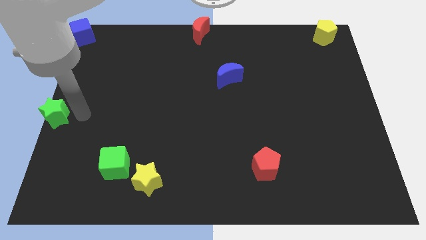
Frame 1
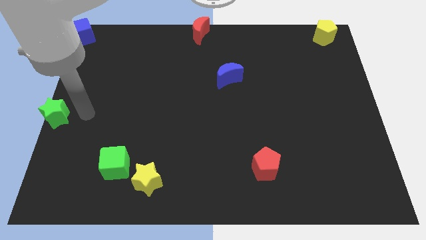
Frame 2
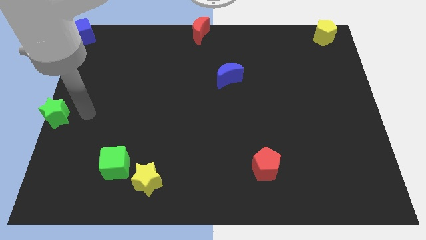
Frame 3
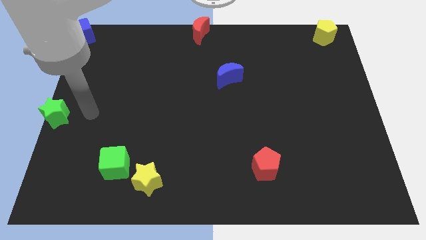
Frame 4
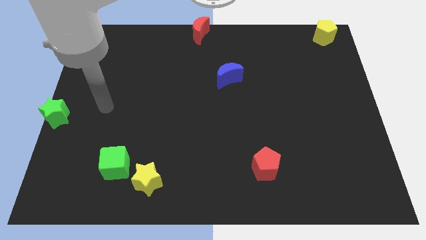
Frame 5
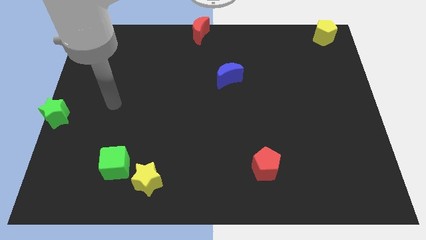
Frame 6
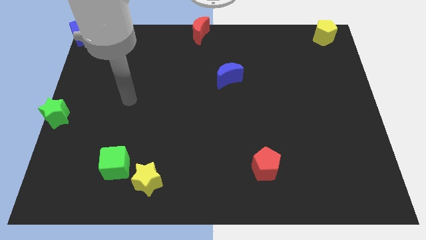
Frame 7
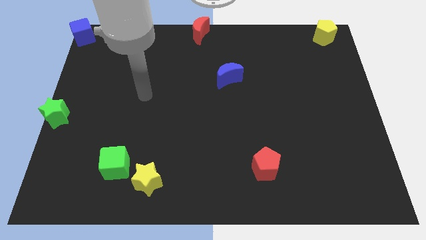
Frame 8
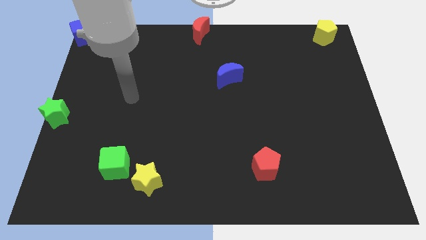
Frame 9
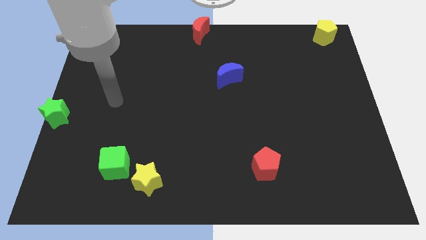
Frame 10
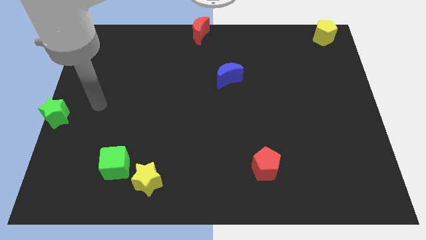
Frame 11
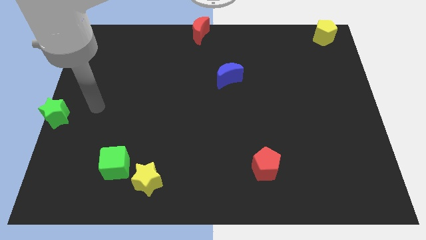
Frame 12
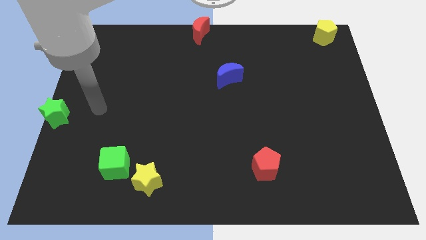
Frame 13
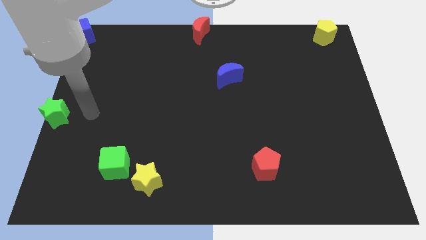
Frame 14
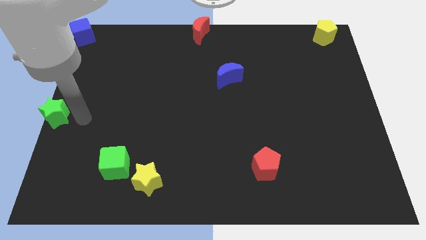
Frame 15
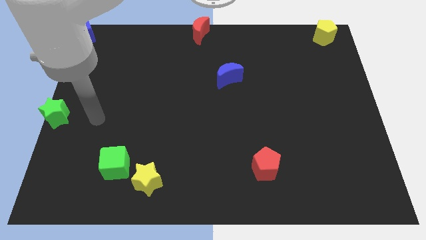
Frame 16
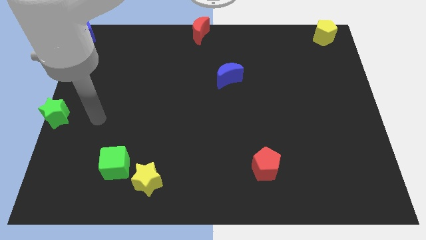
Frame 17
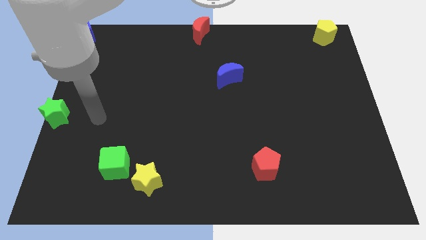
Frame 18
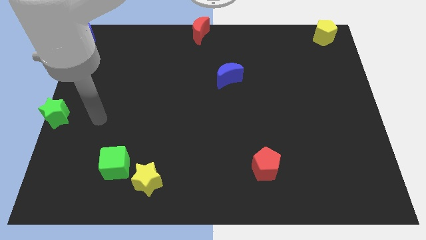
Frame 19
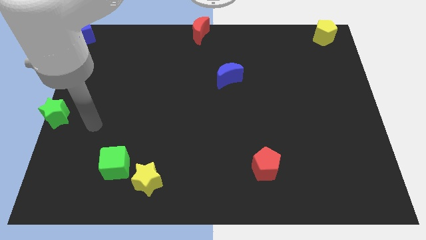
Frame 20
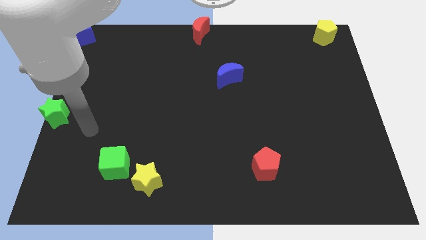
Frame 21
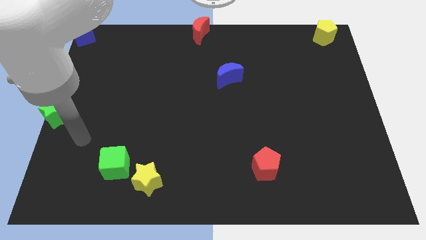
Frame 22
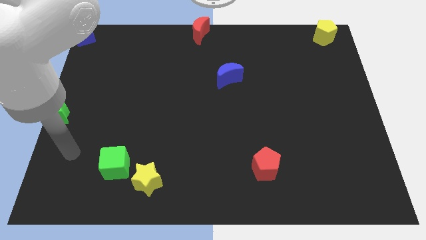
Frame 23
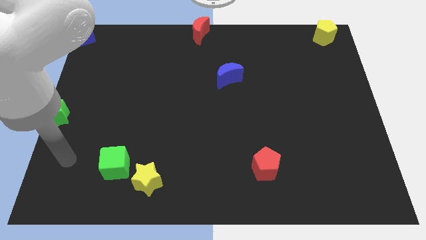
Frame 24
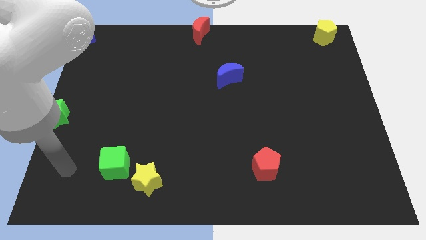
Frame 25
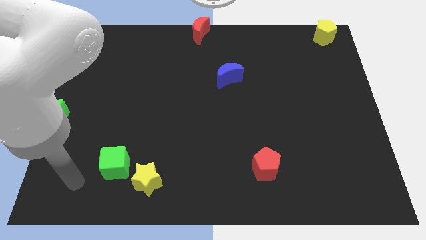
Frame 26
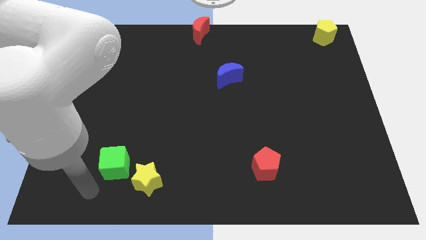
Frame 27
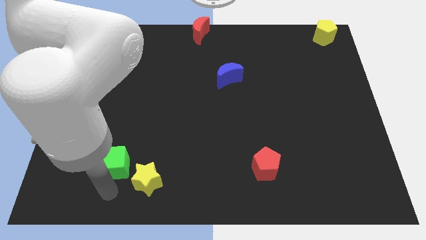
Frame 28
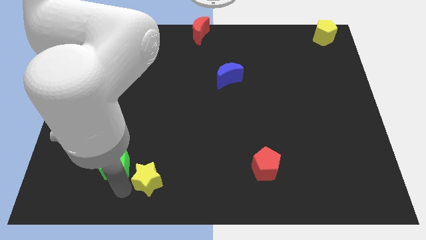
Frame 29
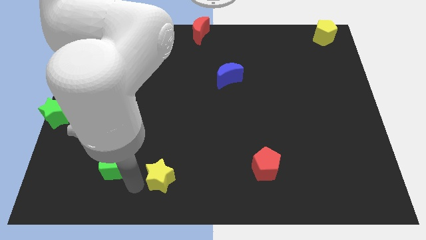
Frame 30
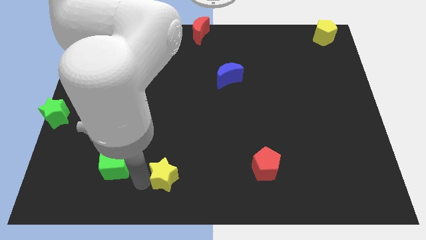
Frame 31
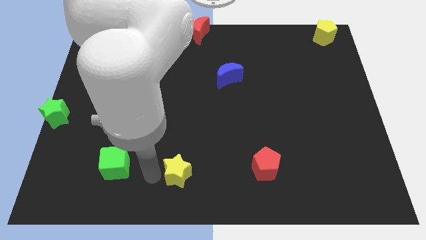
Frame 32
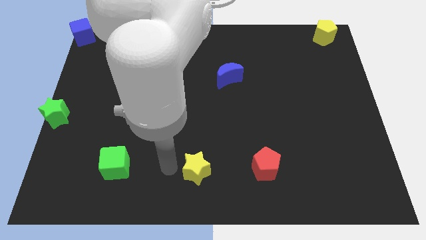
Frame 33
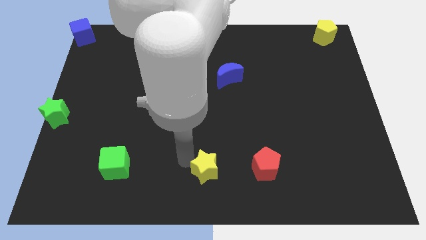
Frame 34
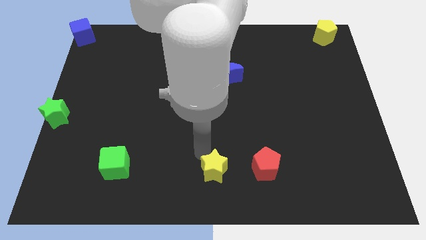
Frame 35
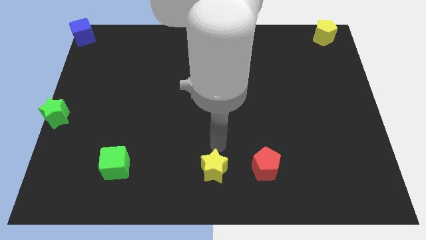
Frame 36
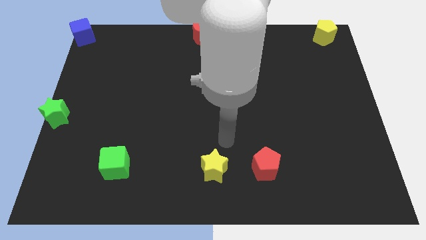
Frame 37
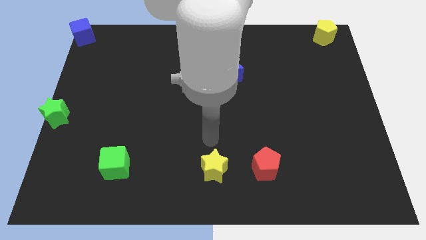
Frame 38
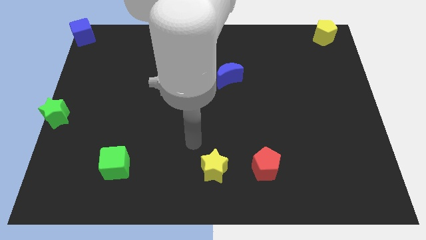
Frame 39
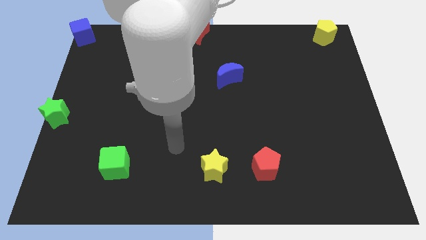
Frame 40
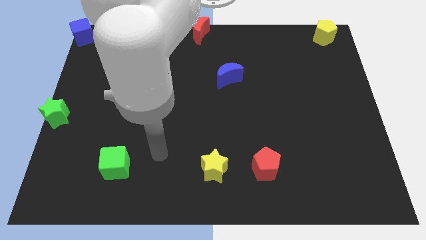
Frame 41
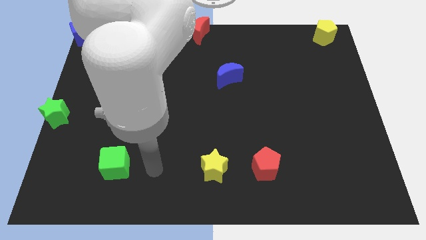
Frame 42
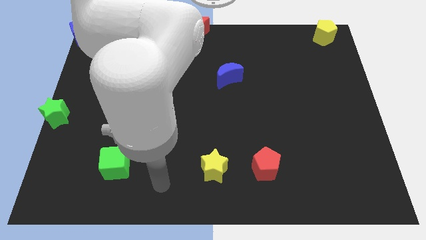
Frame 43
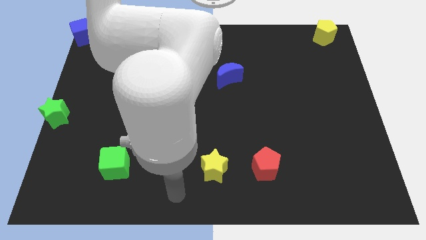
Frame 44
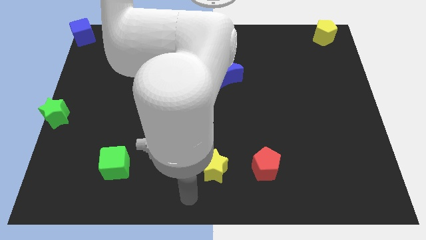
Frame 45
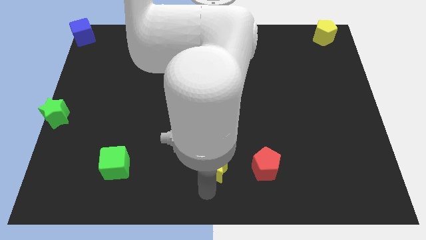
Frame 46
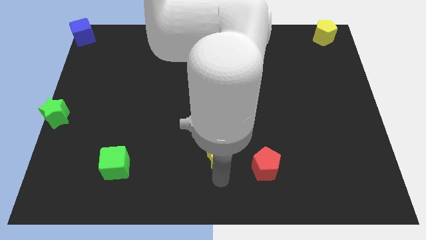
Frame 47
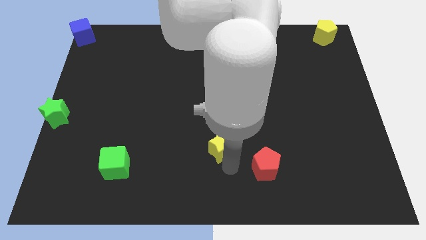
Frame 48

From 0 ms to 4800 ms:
move the yellow star diagonally to the top left of the red pentagon

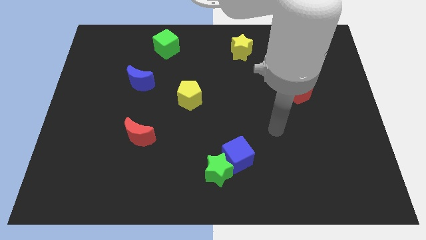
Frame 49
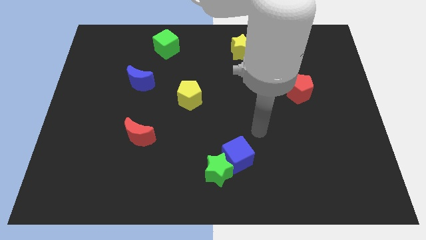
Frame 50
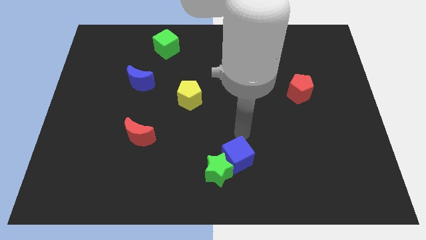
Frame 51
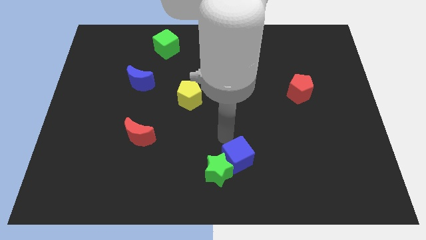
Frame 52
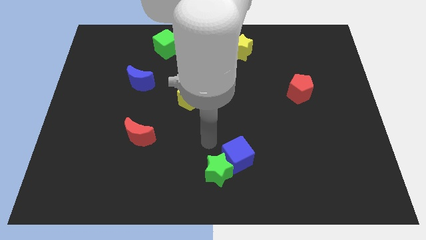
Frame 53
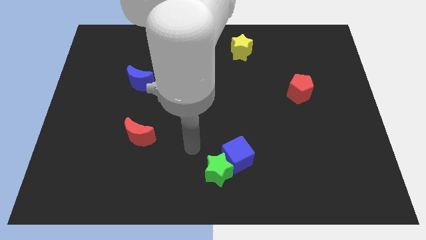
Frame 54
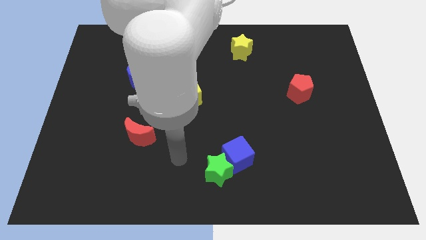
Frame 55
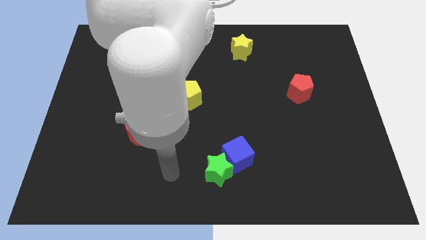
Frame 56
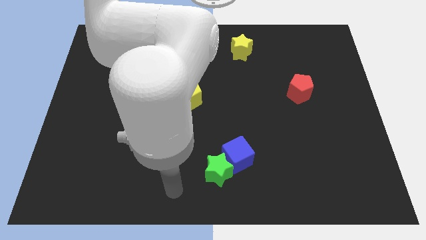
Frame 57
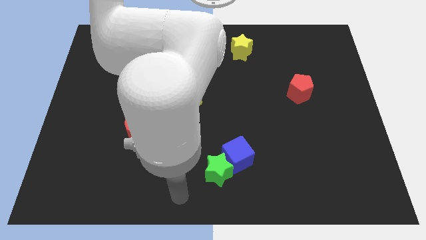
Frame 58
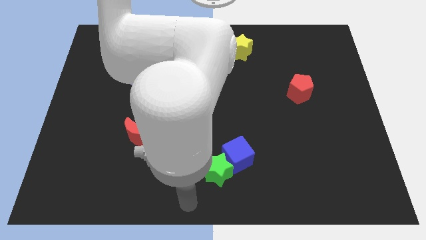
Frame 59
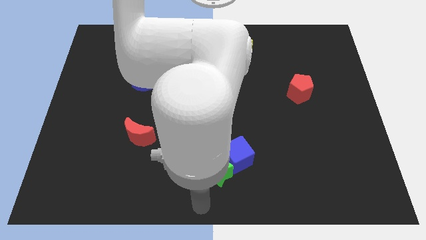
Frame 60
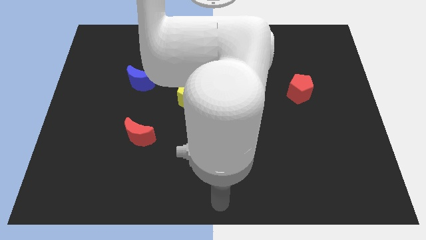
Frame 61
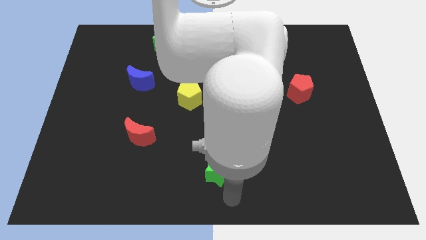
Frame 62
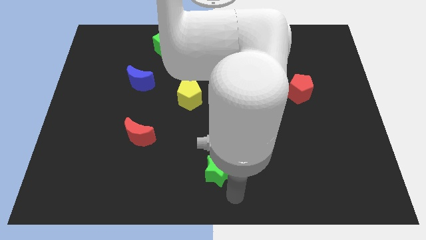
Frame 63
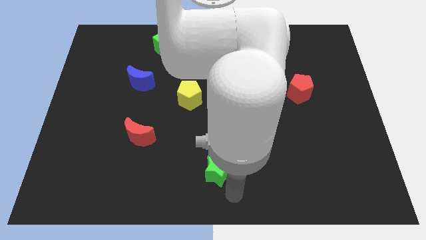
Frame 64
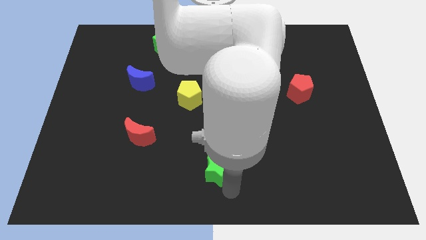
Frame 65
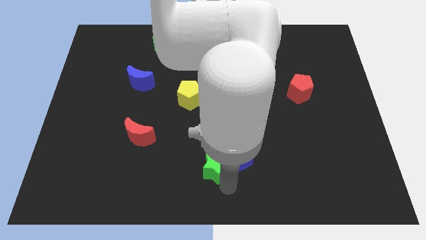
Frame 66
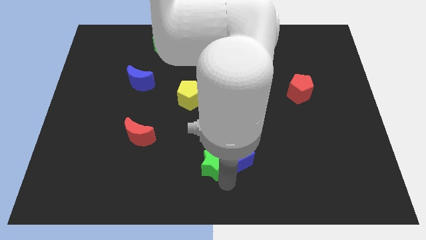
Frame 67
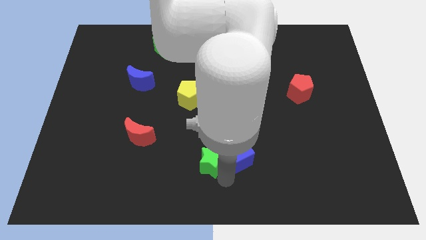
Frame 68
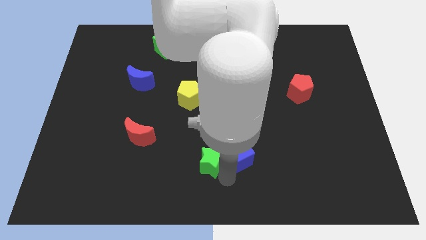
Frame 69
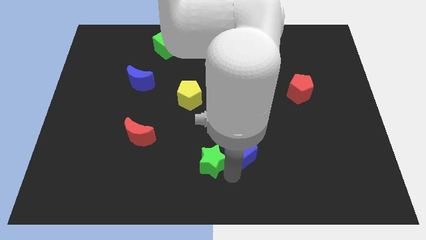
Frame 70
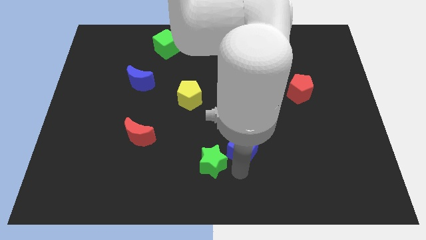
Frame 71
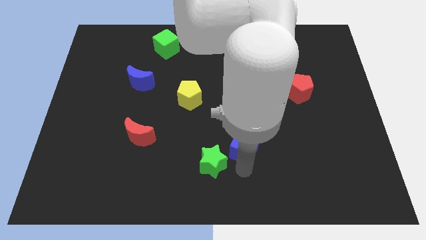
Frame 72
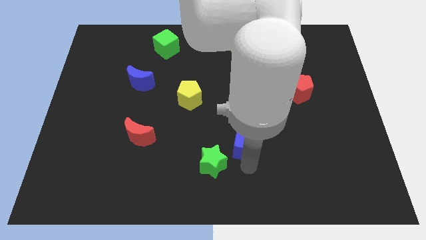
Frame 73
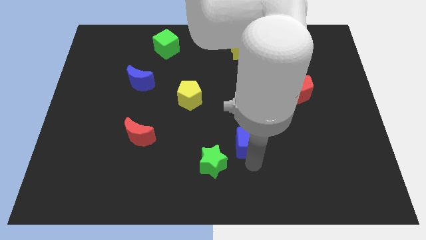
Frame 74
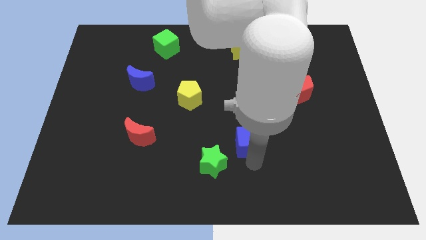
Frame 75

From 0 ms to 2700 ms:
slightly move the green star diagonally up

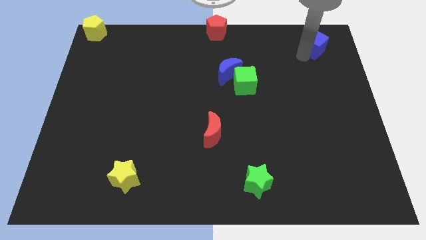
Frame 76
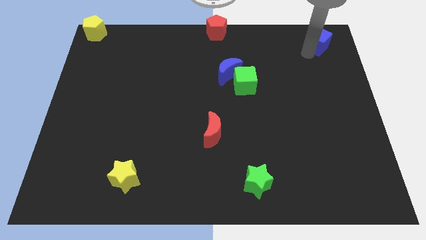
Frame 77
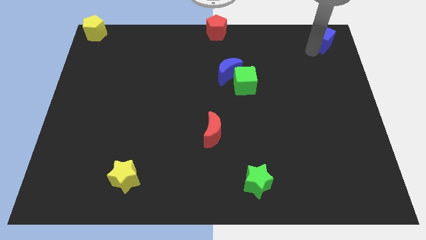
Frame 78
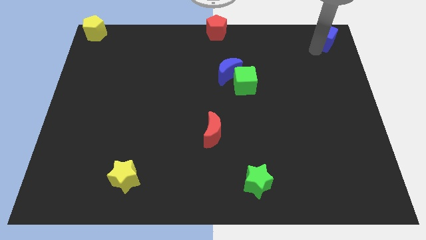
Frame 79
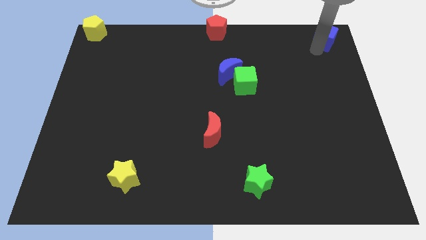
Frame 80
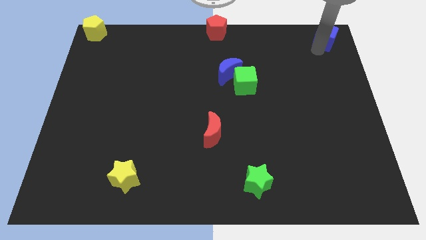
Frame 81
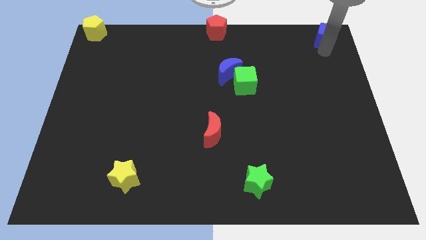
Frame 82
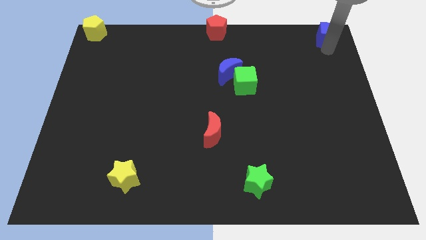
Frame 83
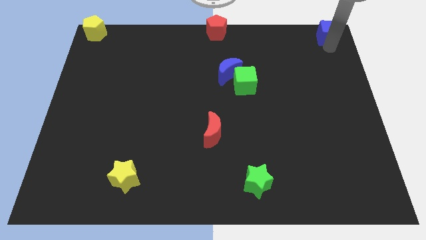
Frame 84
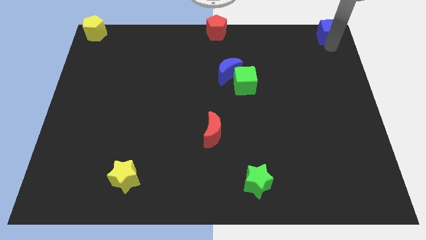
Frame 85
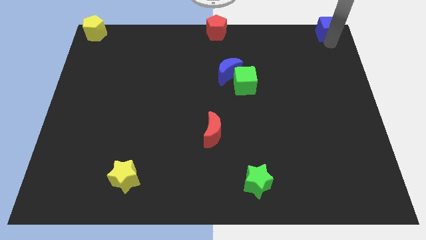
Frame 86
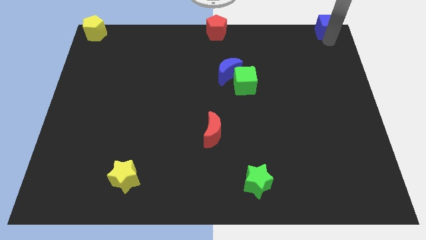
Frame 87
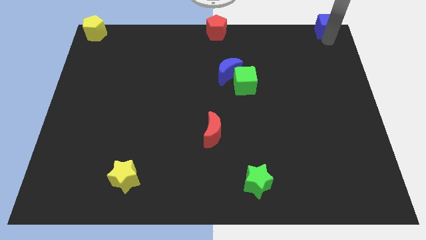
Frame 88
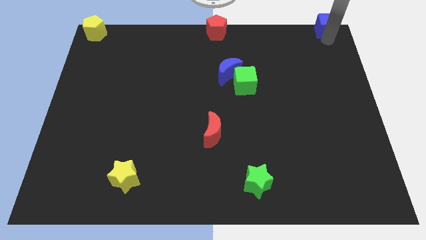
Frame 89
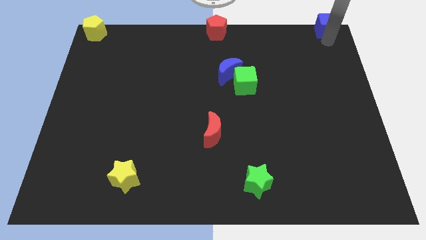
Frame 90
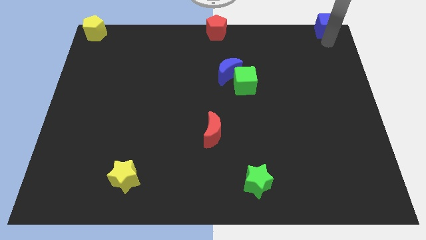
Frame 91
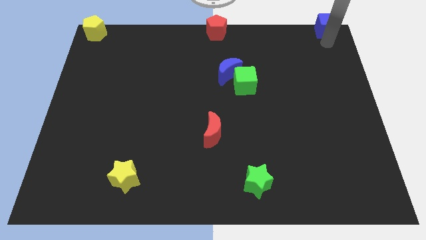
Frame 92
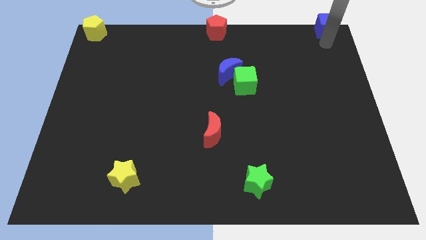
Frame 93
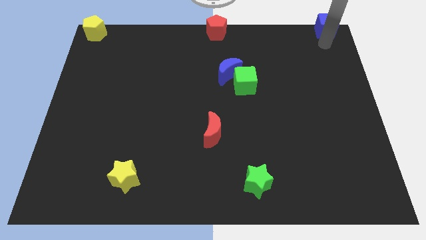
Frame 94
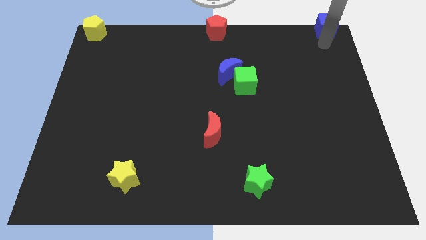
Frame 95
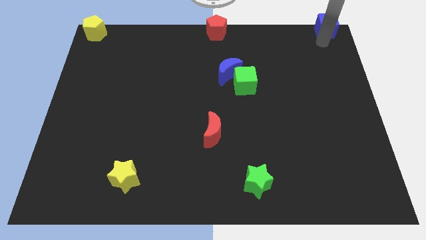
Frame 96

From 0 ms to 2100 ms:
move blue cube to the top right
